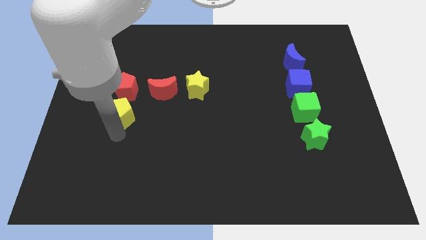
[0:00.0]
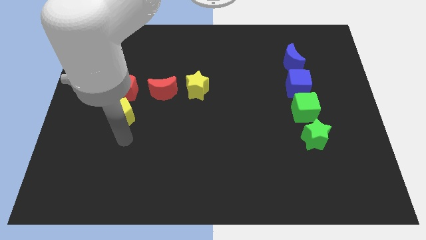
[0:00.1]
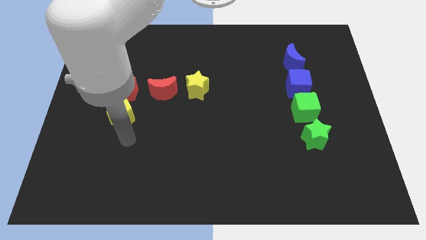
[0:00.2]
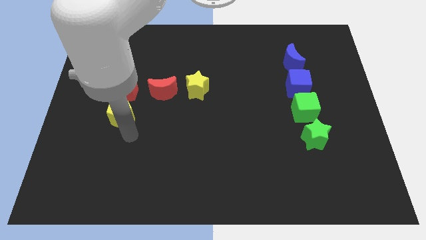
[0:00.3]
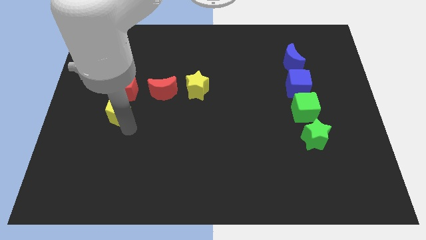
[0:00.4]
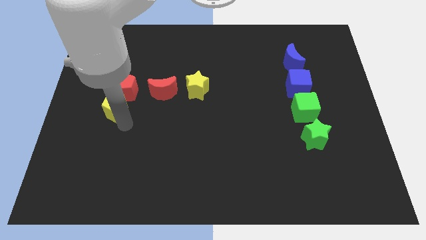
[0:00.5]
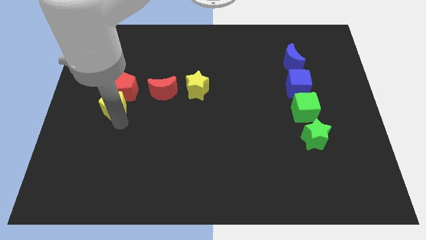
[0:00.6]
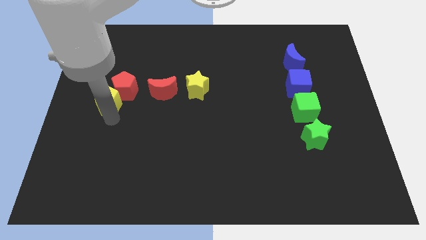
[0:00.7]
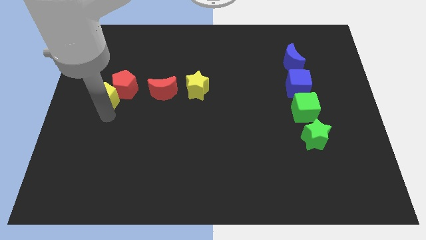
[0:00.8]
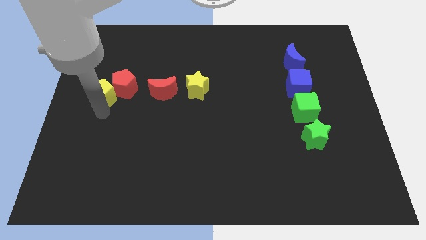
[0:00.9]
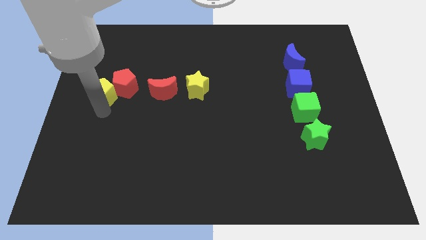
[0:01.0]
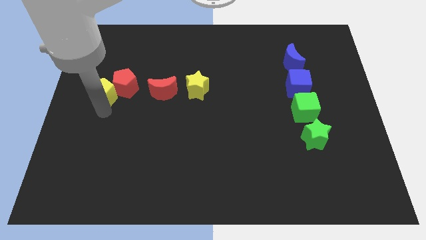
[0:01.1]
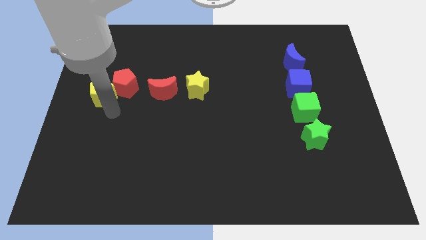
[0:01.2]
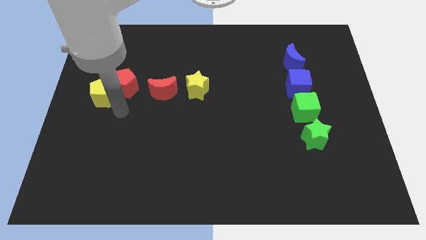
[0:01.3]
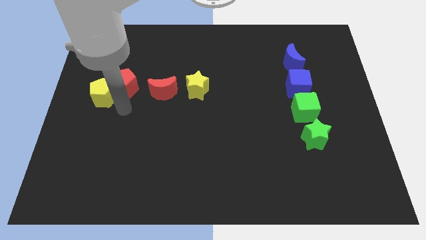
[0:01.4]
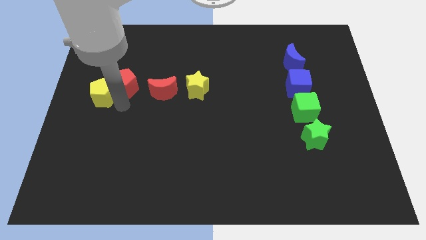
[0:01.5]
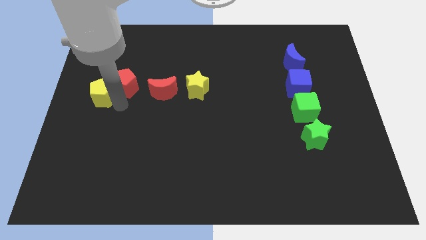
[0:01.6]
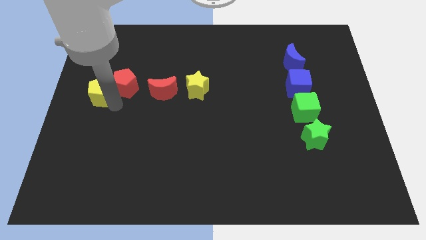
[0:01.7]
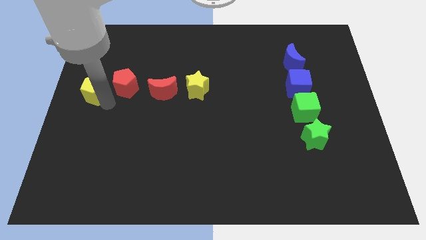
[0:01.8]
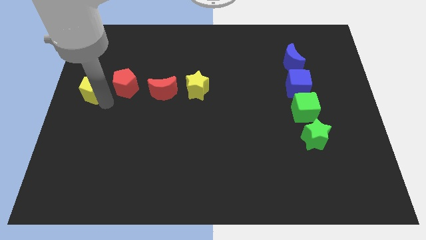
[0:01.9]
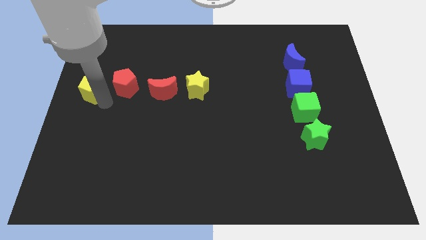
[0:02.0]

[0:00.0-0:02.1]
push the yellow pentagon to the left side of the red pentagon

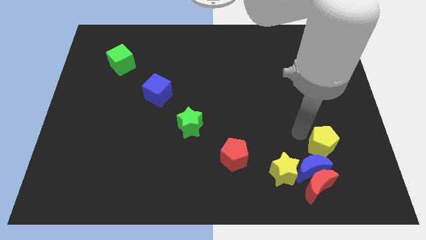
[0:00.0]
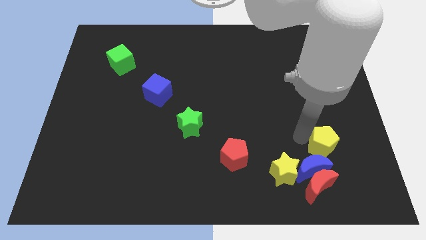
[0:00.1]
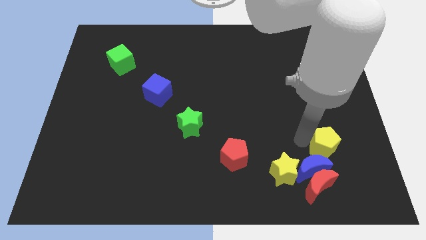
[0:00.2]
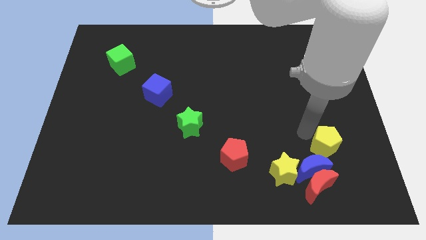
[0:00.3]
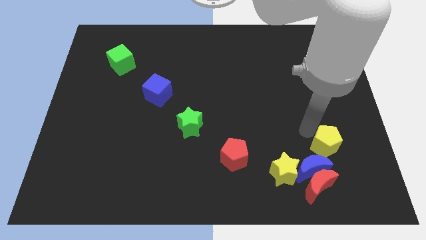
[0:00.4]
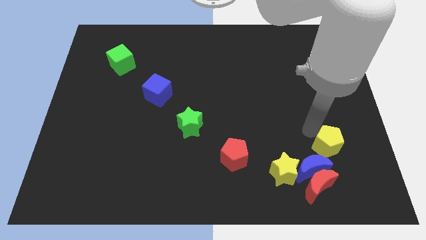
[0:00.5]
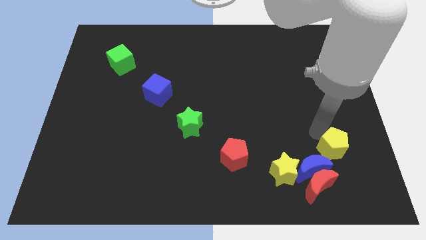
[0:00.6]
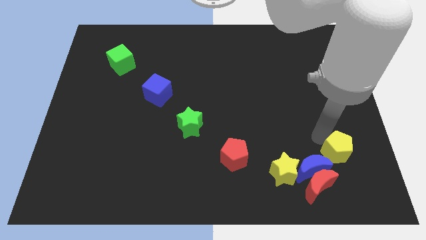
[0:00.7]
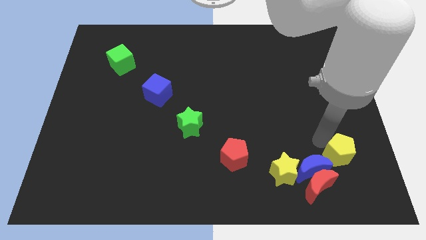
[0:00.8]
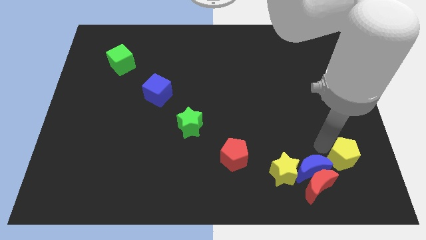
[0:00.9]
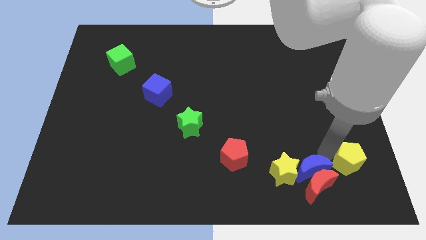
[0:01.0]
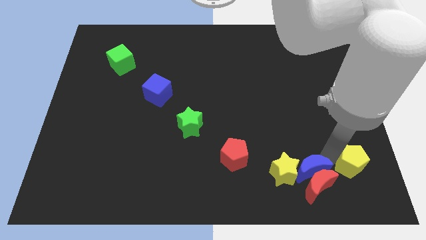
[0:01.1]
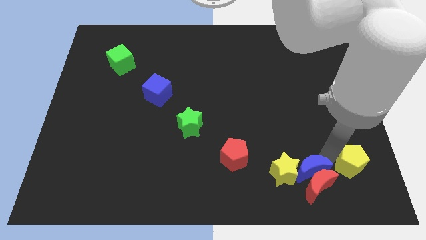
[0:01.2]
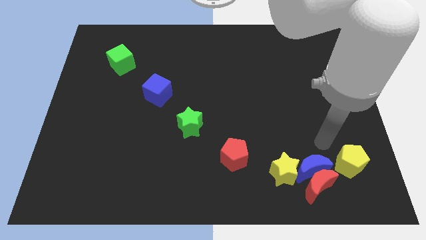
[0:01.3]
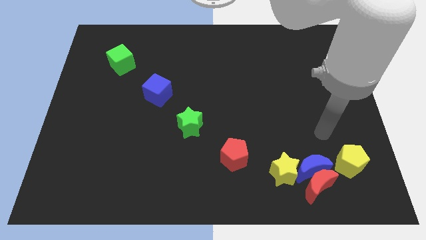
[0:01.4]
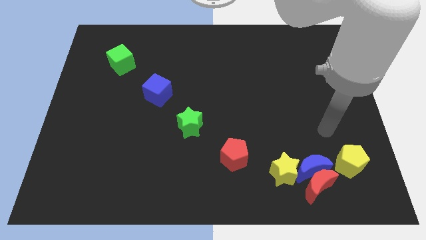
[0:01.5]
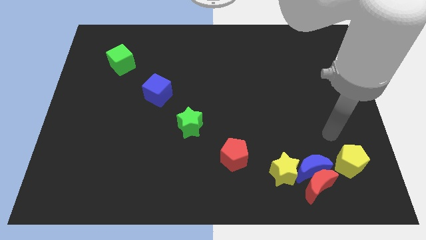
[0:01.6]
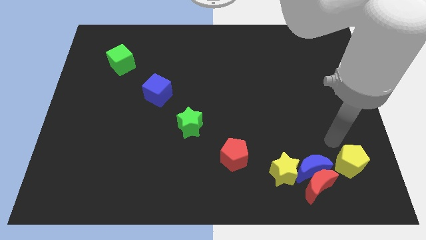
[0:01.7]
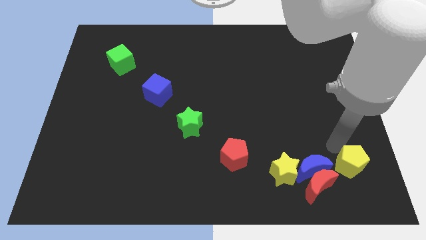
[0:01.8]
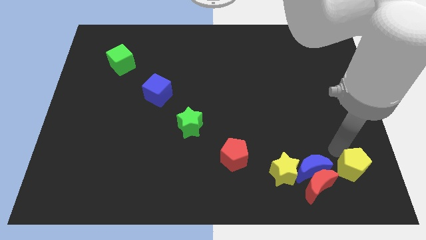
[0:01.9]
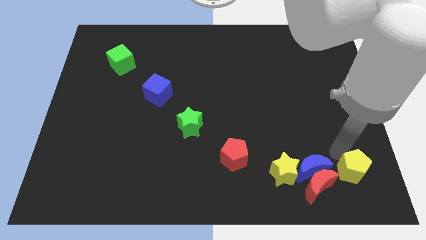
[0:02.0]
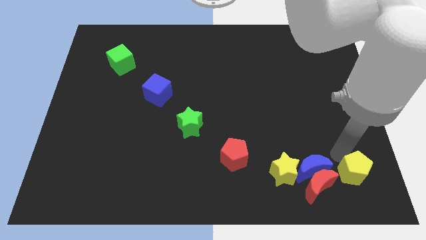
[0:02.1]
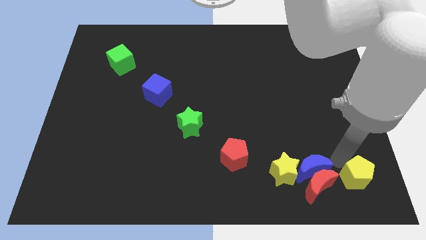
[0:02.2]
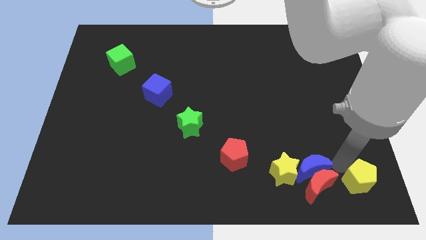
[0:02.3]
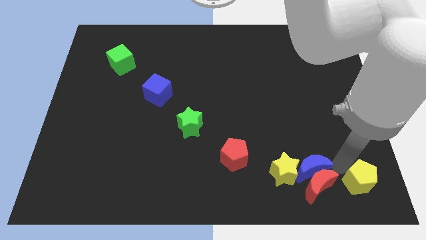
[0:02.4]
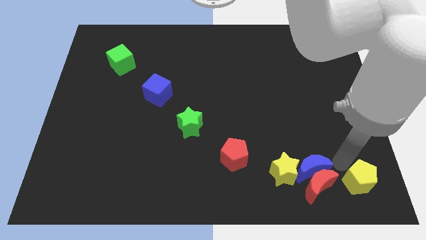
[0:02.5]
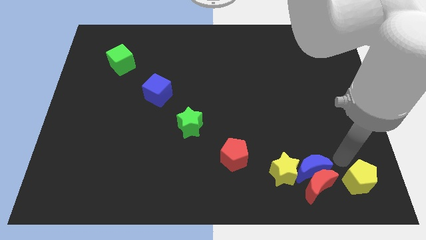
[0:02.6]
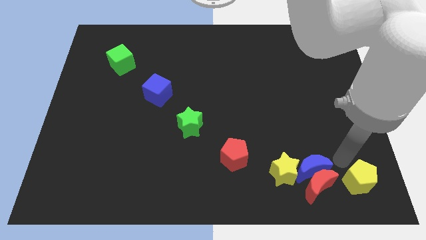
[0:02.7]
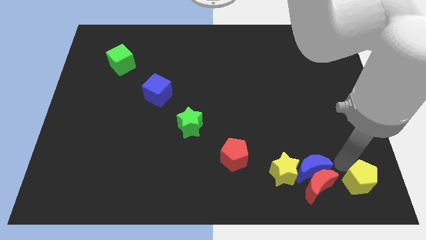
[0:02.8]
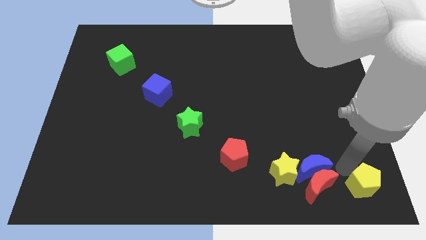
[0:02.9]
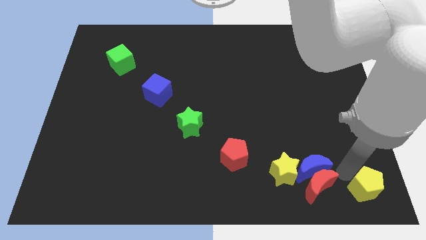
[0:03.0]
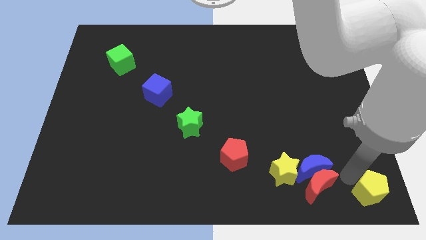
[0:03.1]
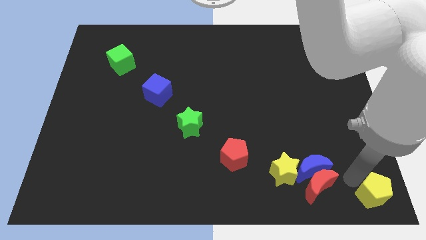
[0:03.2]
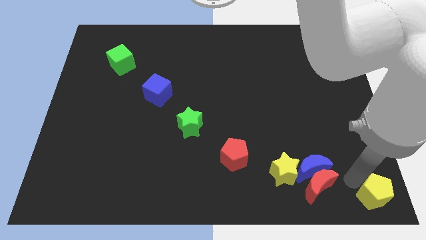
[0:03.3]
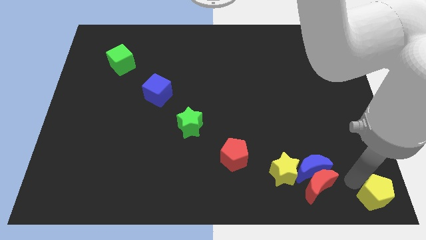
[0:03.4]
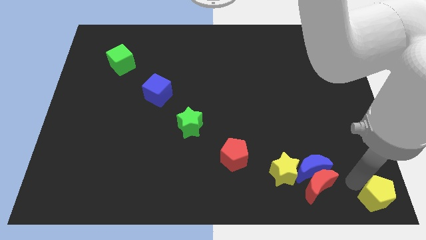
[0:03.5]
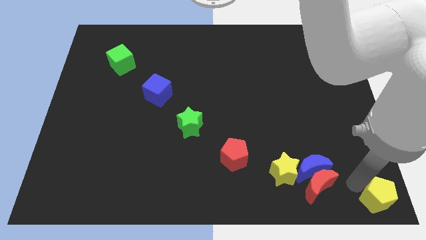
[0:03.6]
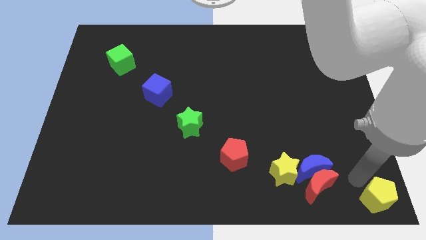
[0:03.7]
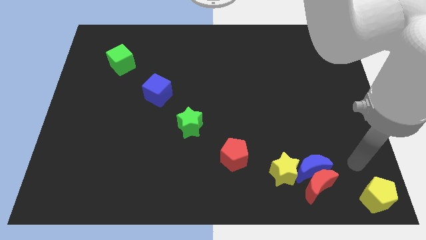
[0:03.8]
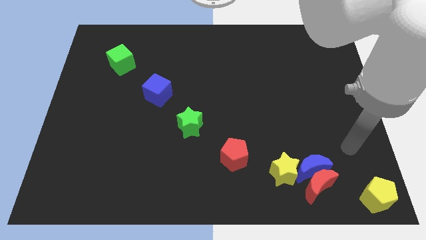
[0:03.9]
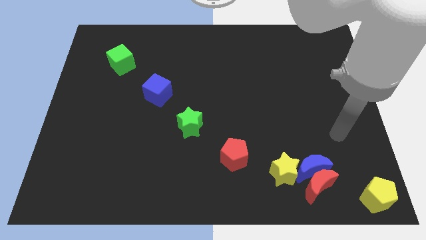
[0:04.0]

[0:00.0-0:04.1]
push the yellow pentagon to the bottom right corner of the board

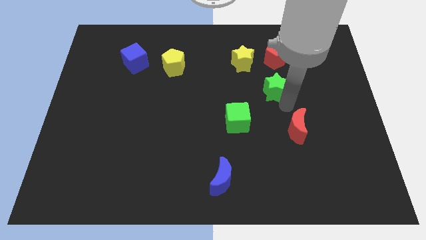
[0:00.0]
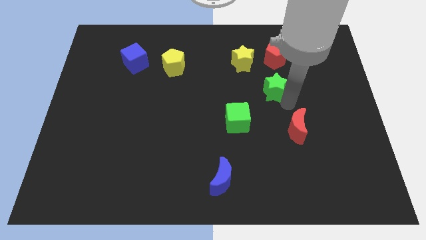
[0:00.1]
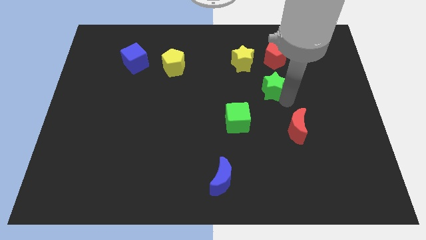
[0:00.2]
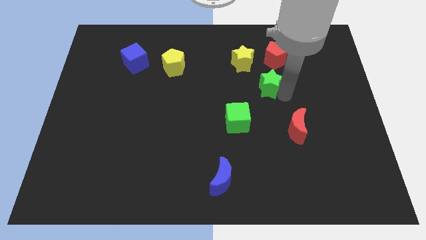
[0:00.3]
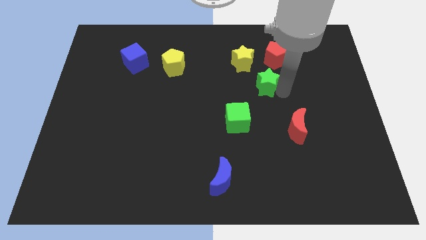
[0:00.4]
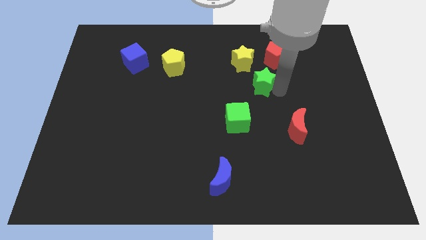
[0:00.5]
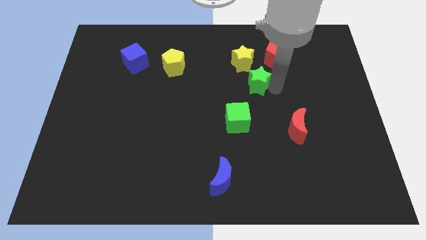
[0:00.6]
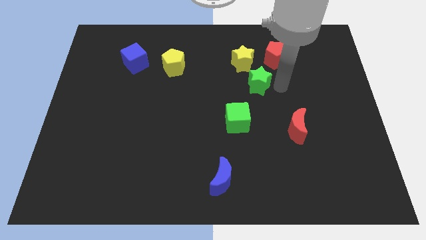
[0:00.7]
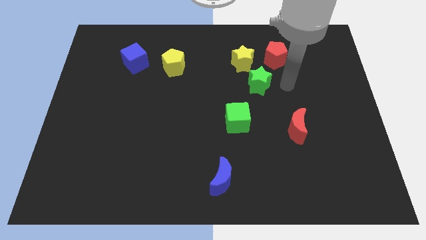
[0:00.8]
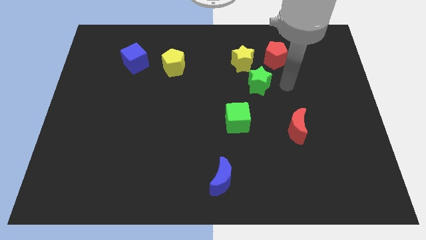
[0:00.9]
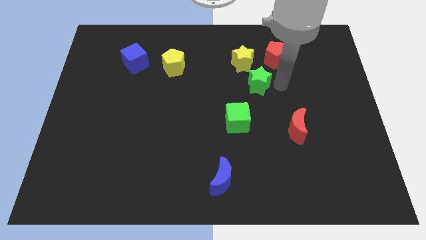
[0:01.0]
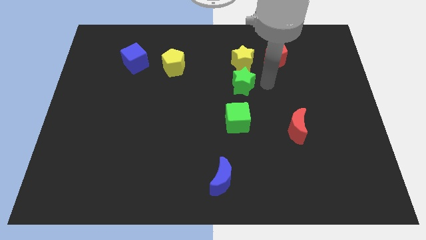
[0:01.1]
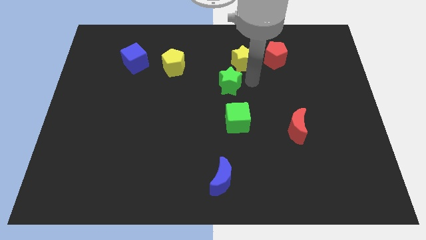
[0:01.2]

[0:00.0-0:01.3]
place the green star in between yellow star and green cube

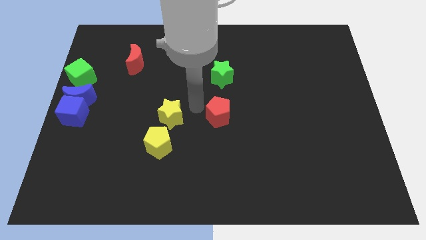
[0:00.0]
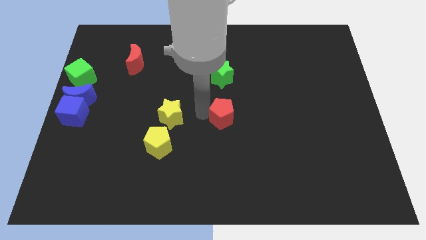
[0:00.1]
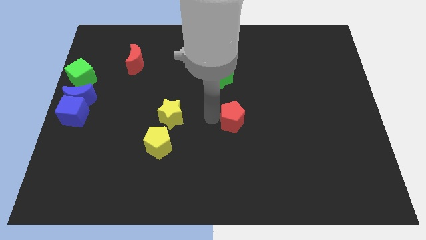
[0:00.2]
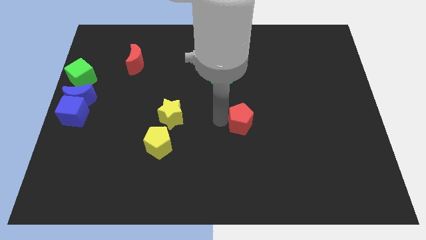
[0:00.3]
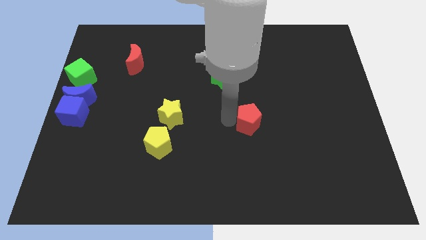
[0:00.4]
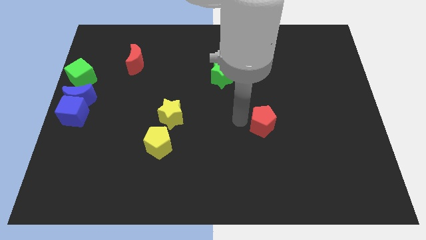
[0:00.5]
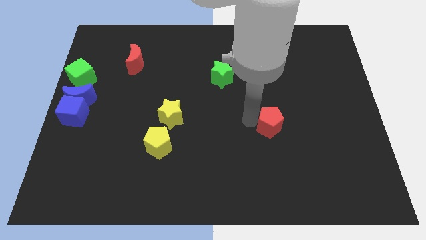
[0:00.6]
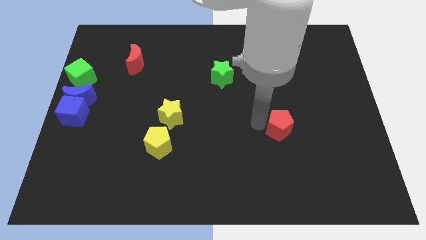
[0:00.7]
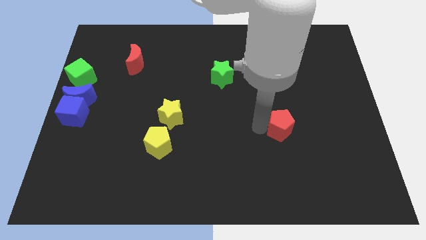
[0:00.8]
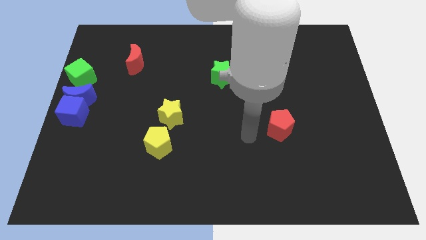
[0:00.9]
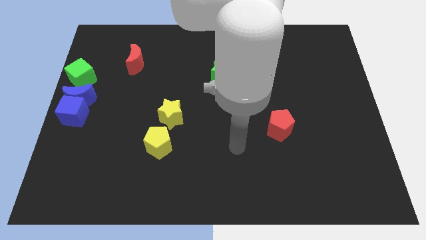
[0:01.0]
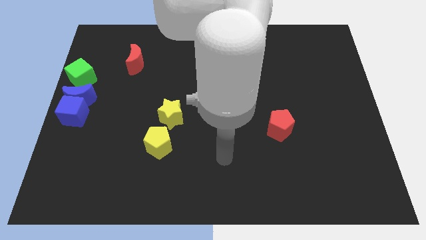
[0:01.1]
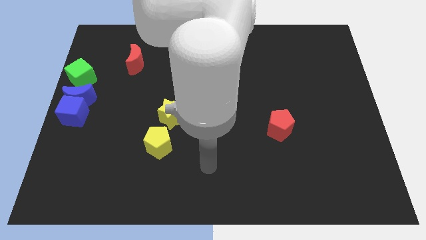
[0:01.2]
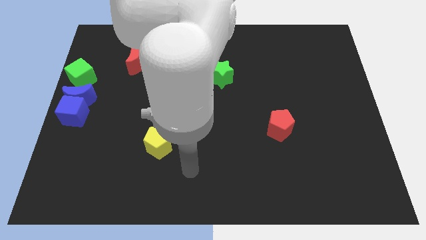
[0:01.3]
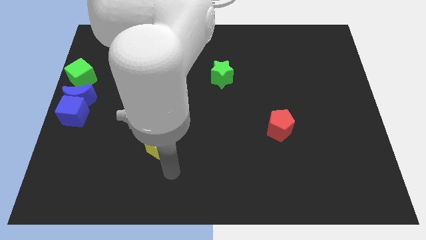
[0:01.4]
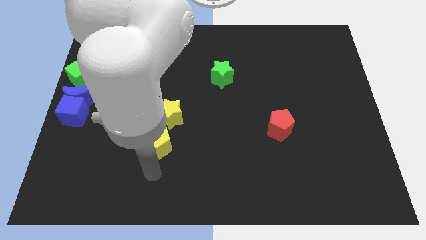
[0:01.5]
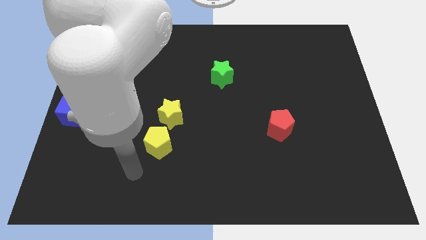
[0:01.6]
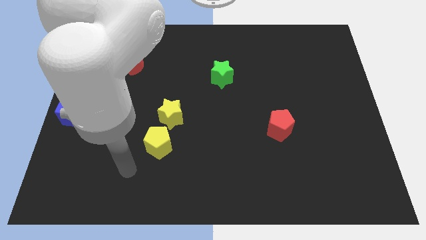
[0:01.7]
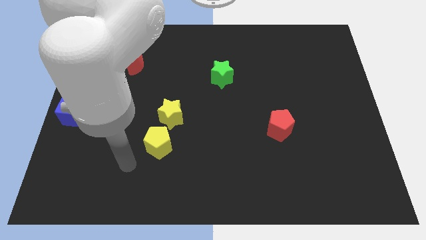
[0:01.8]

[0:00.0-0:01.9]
drag the red pentagon to the right
